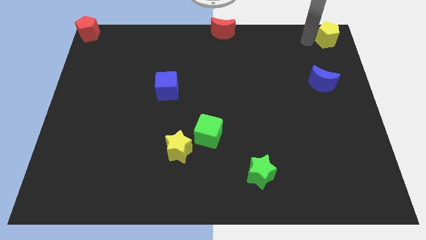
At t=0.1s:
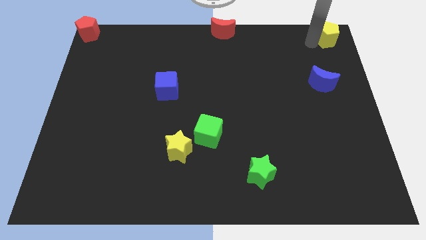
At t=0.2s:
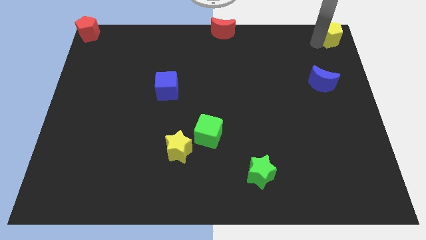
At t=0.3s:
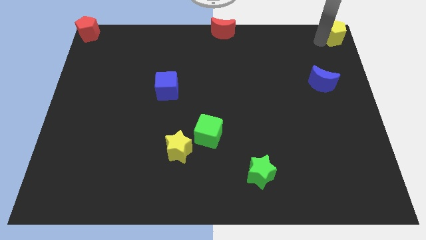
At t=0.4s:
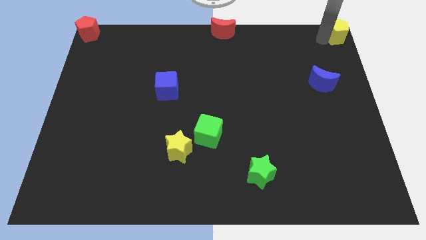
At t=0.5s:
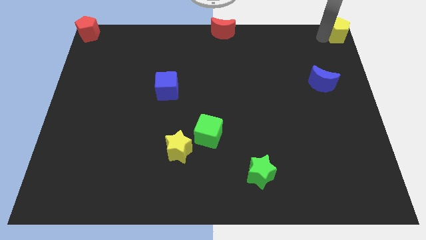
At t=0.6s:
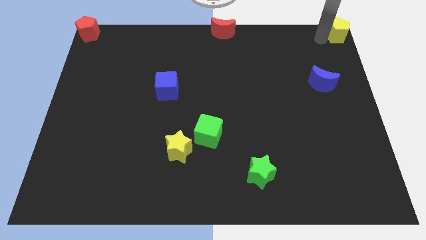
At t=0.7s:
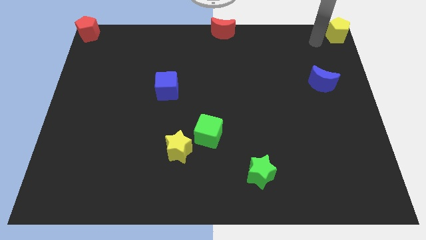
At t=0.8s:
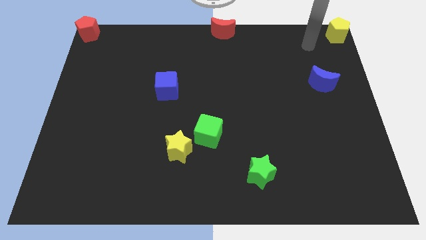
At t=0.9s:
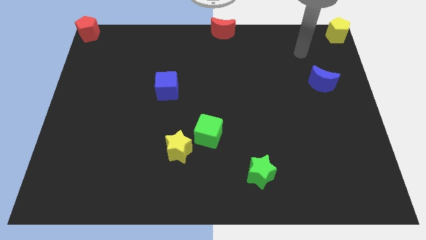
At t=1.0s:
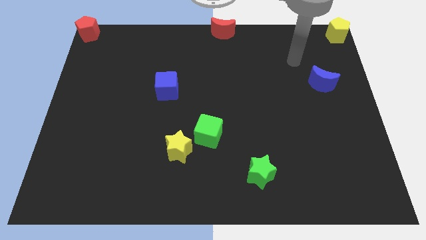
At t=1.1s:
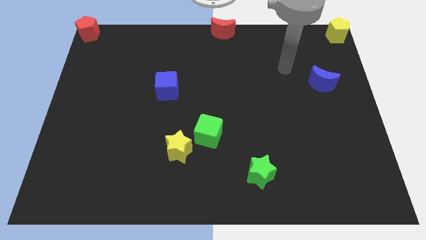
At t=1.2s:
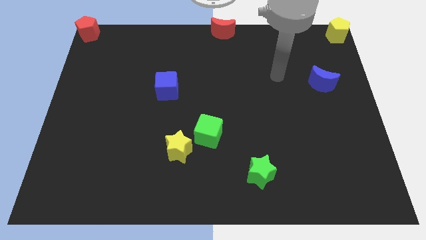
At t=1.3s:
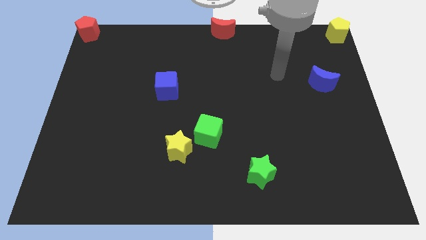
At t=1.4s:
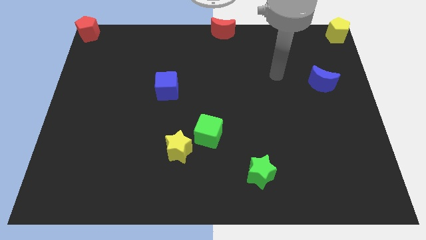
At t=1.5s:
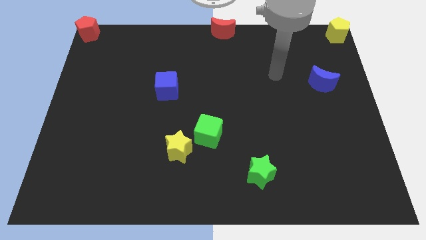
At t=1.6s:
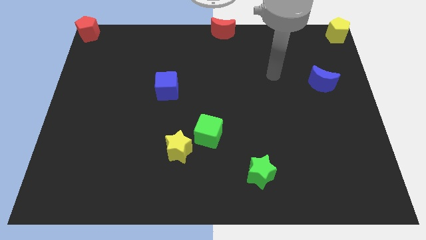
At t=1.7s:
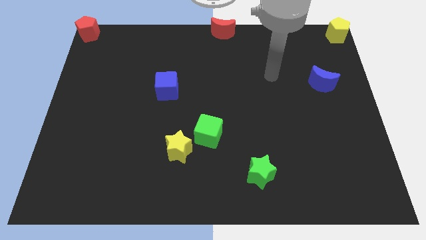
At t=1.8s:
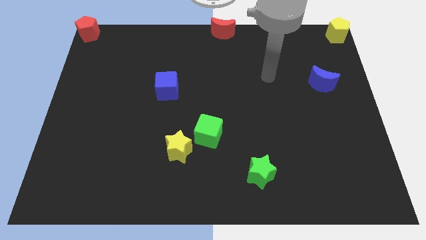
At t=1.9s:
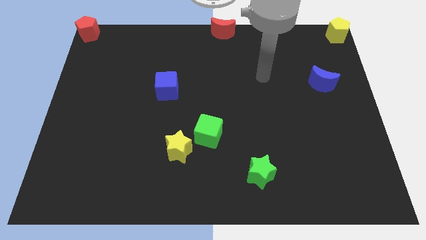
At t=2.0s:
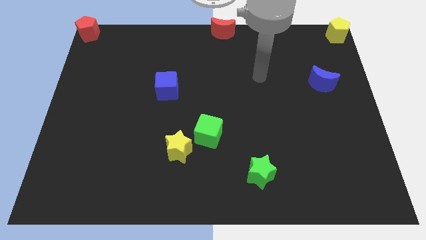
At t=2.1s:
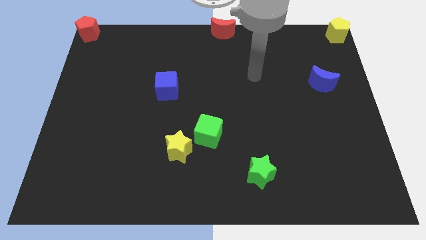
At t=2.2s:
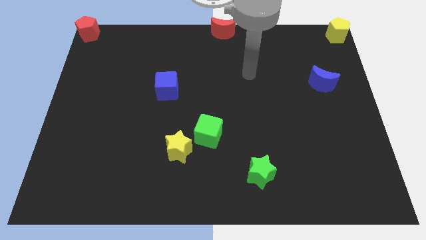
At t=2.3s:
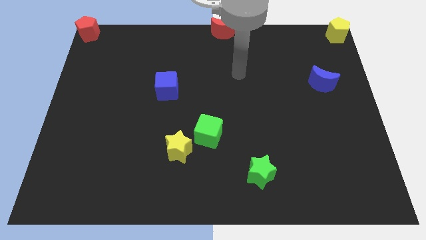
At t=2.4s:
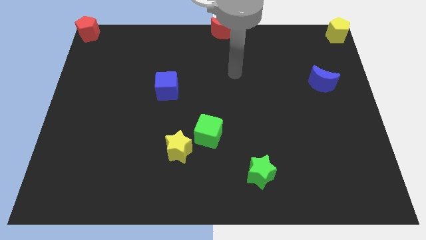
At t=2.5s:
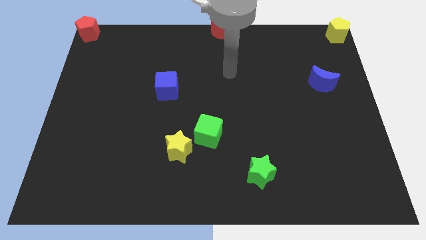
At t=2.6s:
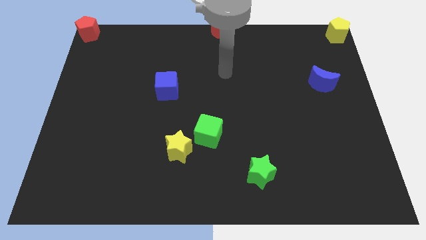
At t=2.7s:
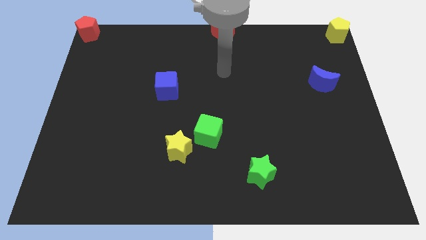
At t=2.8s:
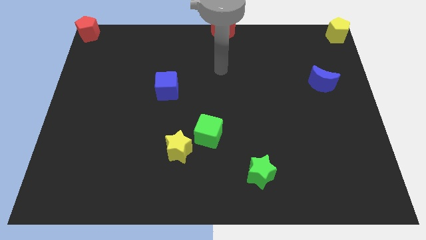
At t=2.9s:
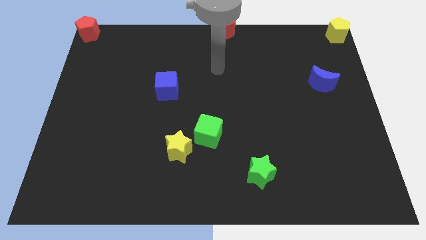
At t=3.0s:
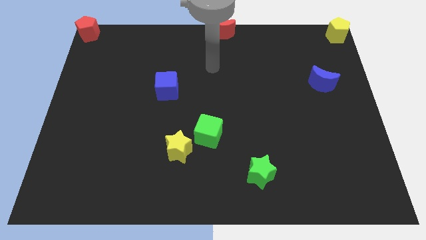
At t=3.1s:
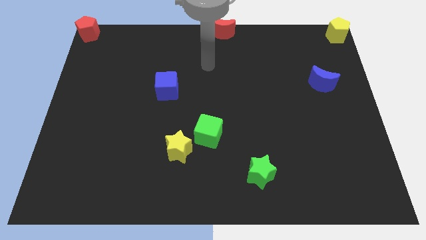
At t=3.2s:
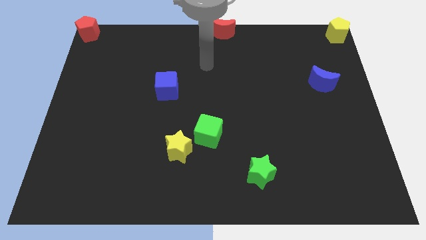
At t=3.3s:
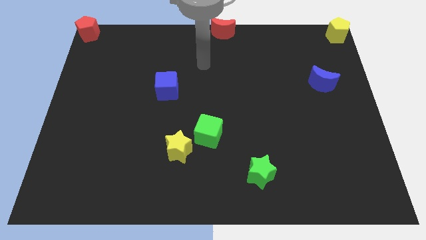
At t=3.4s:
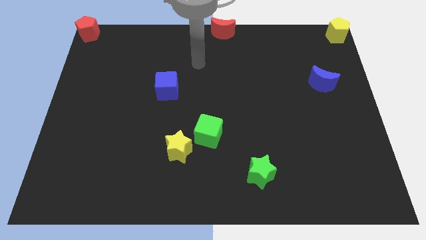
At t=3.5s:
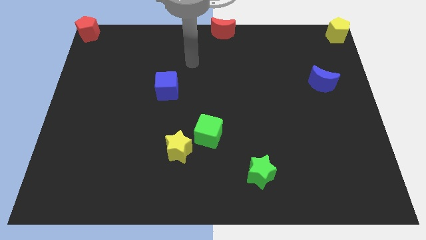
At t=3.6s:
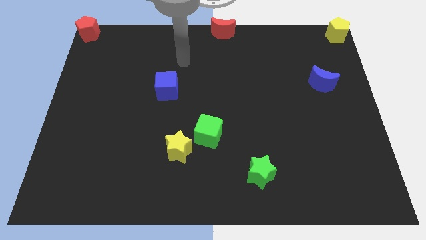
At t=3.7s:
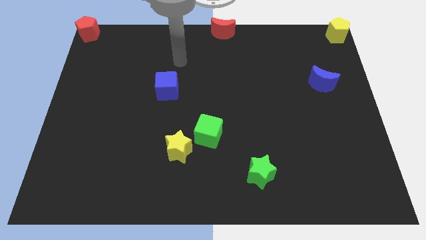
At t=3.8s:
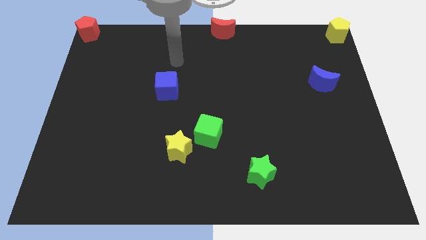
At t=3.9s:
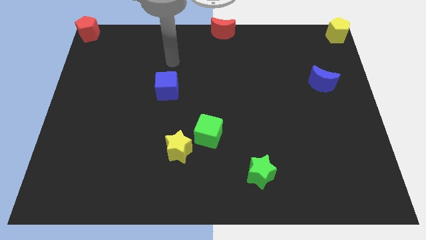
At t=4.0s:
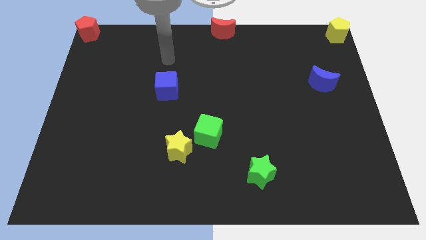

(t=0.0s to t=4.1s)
move your arm away from yellow pentagon

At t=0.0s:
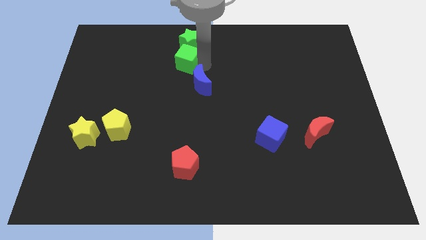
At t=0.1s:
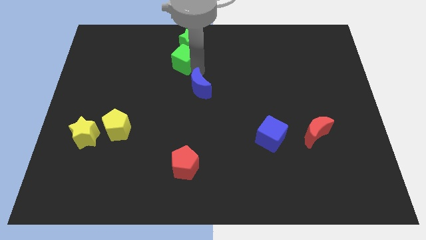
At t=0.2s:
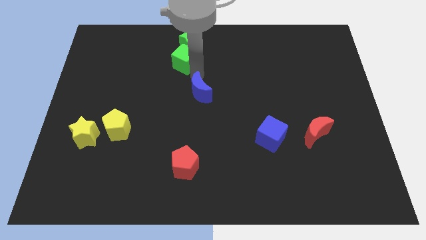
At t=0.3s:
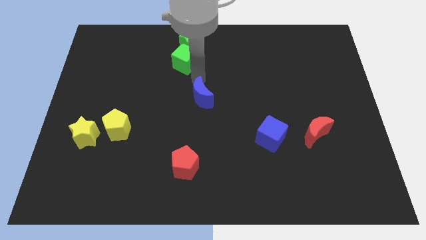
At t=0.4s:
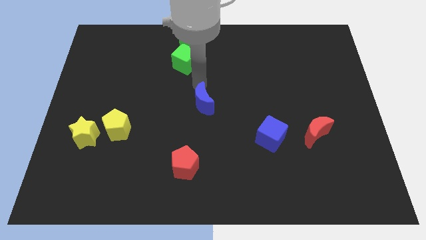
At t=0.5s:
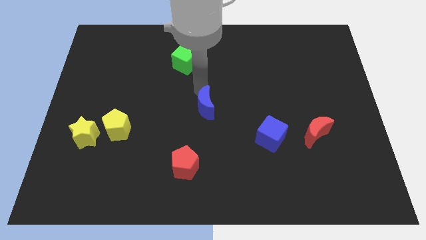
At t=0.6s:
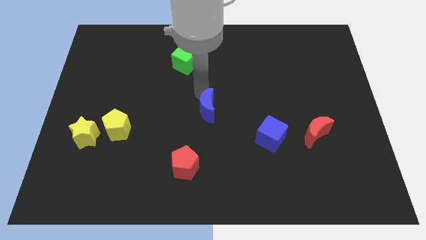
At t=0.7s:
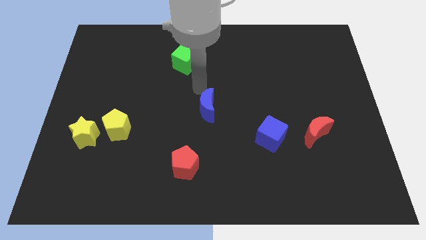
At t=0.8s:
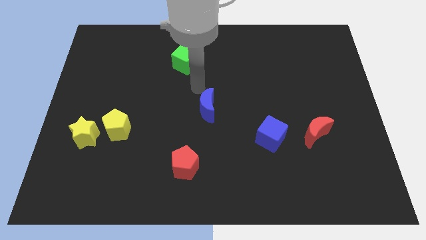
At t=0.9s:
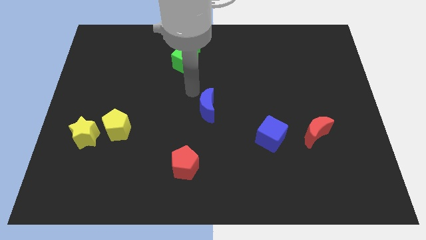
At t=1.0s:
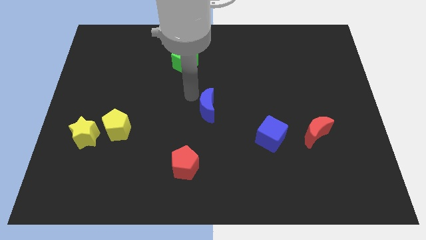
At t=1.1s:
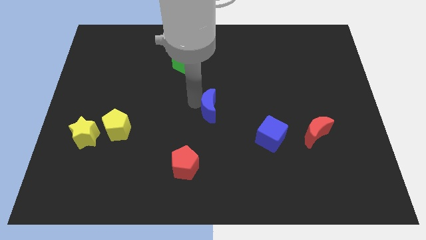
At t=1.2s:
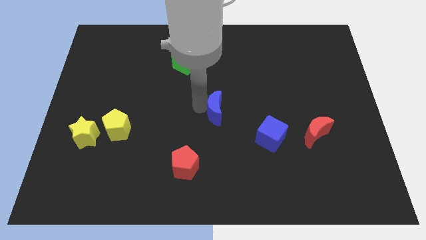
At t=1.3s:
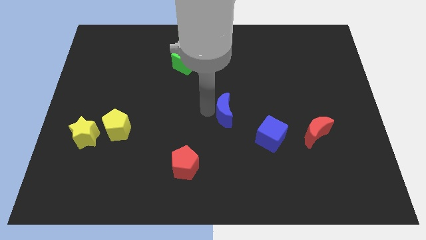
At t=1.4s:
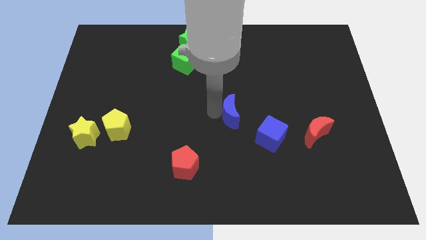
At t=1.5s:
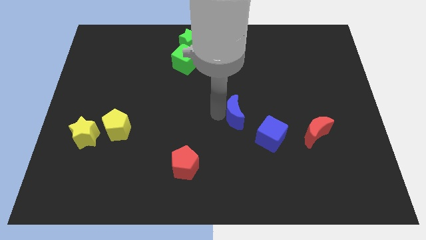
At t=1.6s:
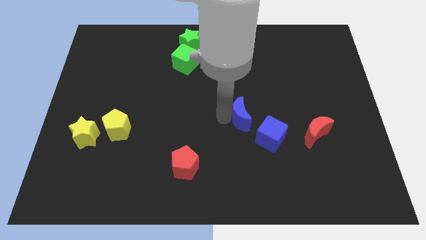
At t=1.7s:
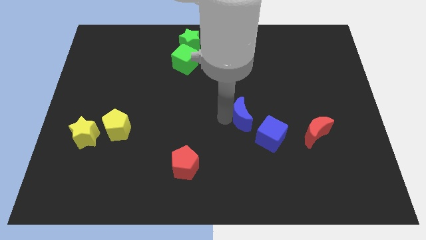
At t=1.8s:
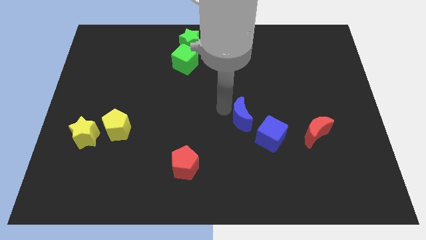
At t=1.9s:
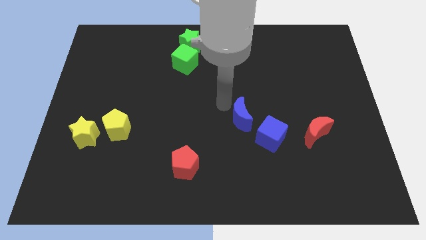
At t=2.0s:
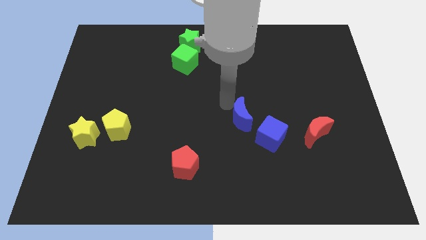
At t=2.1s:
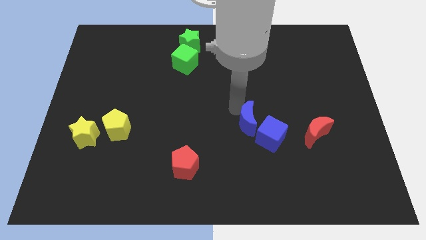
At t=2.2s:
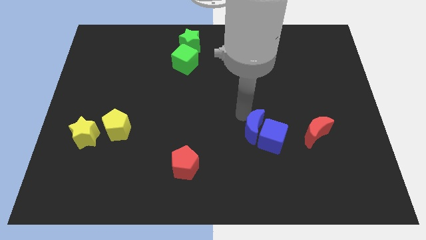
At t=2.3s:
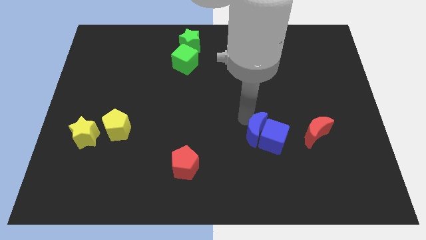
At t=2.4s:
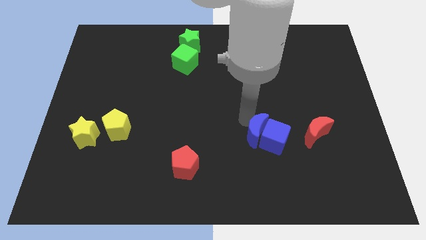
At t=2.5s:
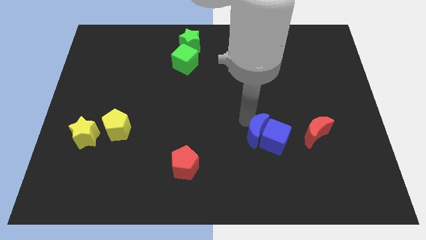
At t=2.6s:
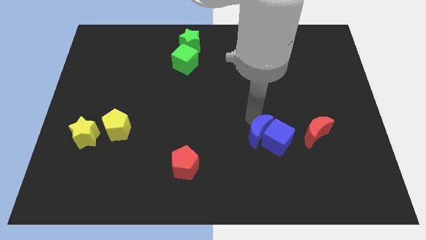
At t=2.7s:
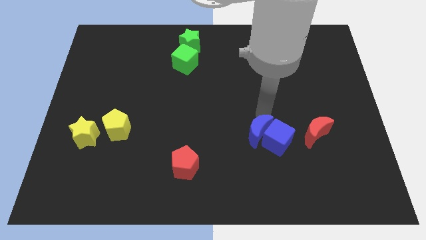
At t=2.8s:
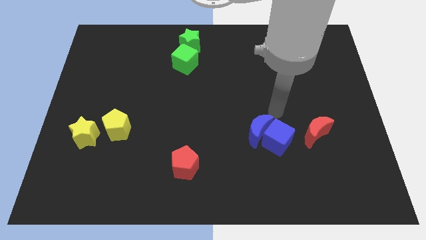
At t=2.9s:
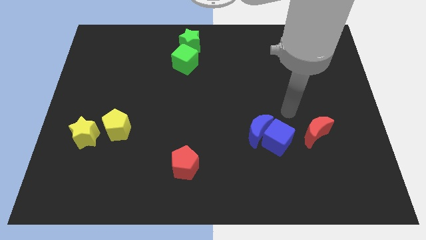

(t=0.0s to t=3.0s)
move the blue moon into the blue cube

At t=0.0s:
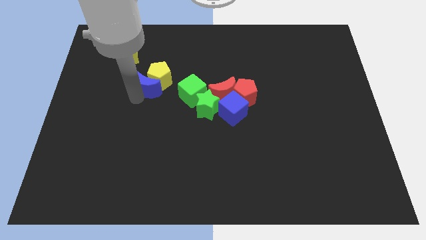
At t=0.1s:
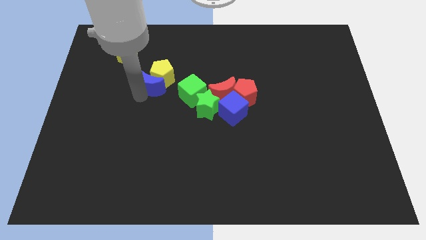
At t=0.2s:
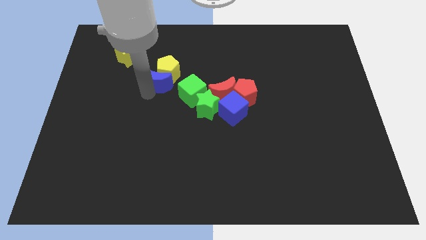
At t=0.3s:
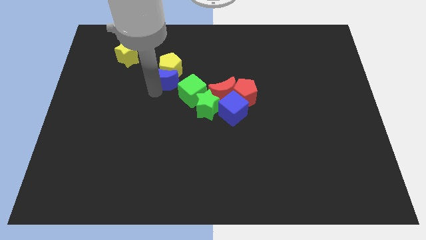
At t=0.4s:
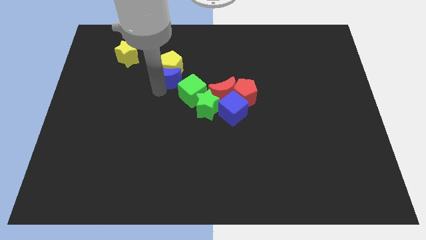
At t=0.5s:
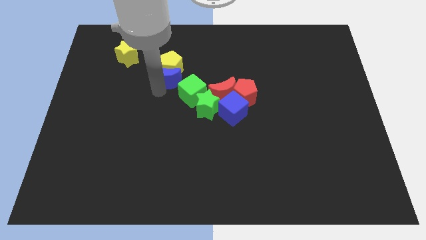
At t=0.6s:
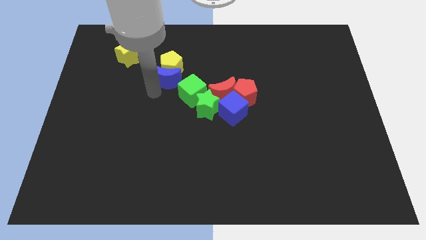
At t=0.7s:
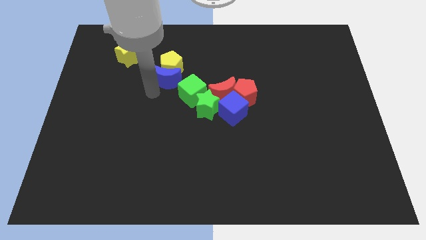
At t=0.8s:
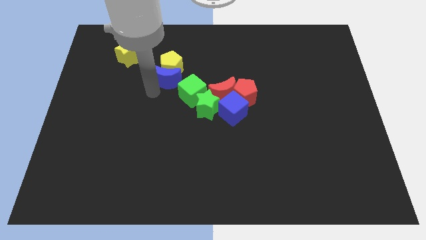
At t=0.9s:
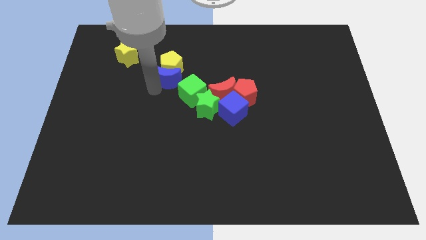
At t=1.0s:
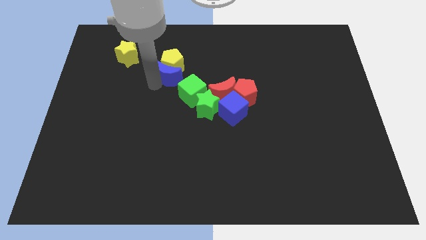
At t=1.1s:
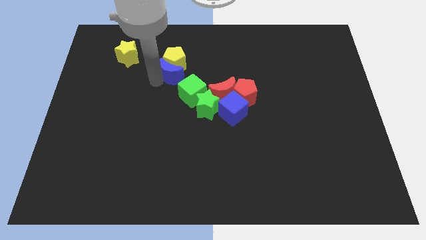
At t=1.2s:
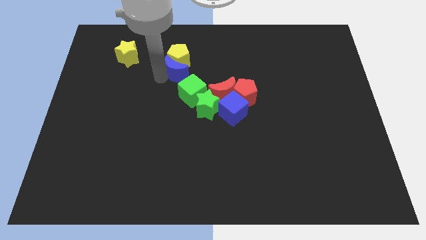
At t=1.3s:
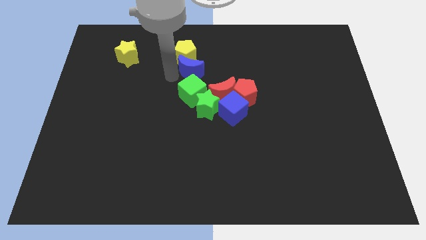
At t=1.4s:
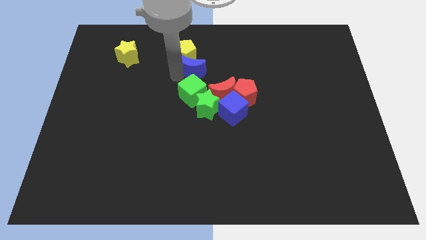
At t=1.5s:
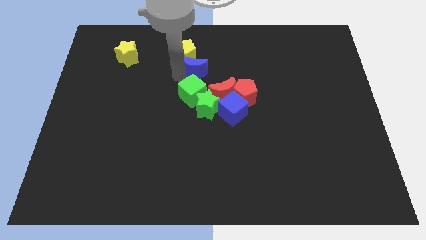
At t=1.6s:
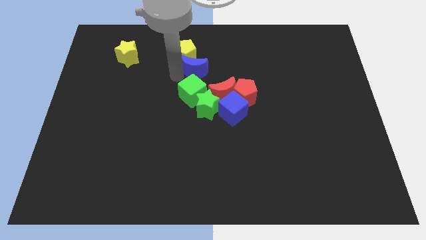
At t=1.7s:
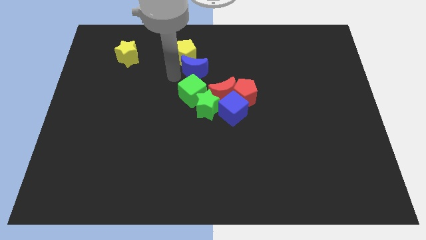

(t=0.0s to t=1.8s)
move the blue moon along with the yellow pentagon above to the green cube
